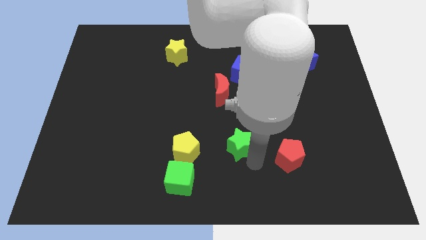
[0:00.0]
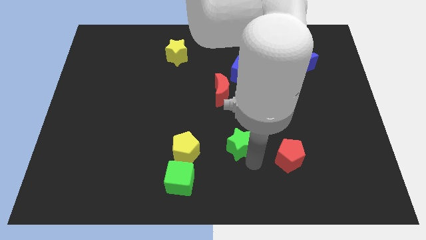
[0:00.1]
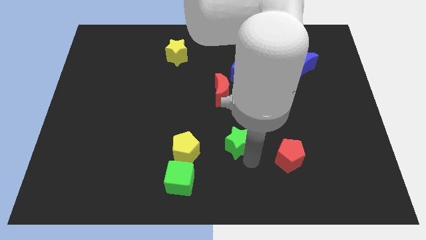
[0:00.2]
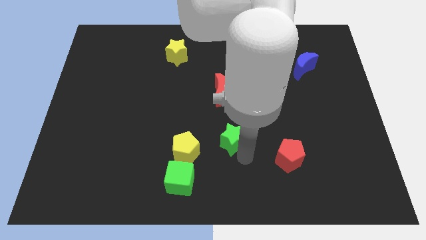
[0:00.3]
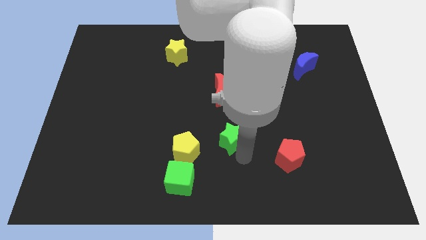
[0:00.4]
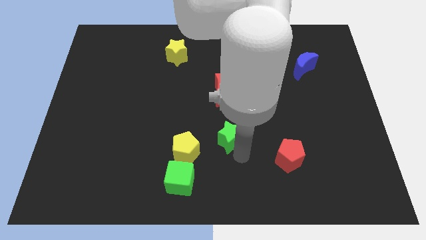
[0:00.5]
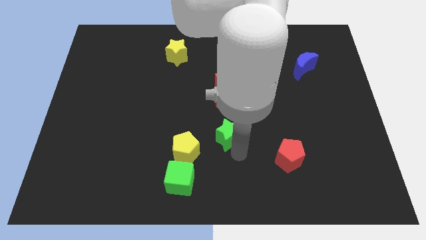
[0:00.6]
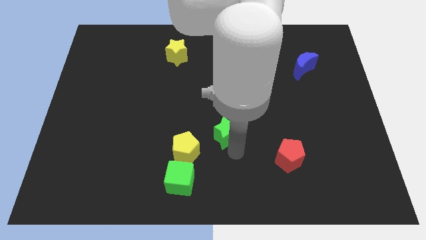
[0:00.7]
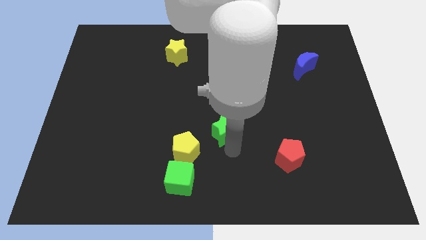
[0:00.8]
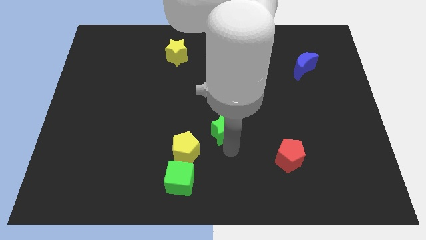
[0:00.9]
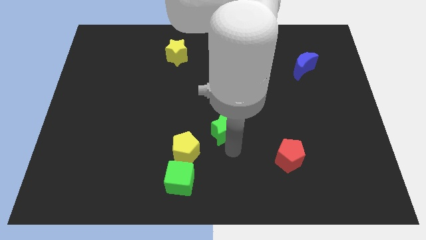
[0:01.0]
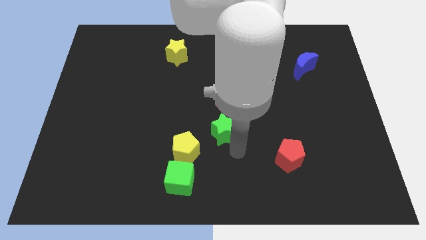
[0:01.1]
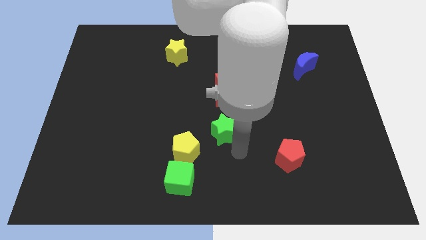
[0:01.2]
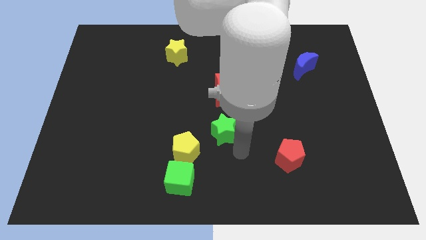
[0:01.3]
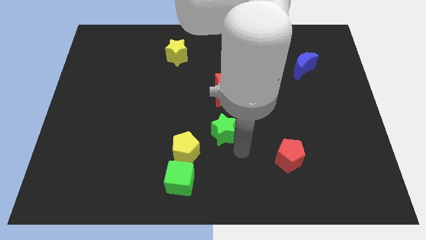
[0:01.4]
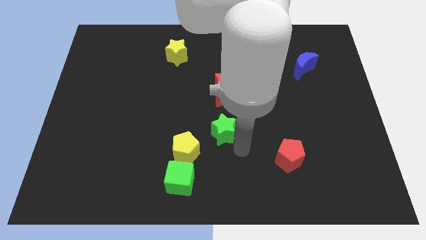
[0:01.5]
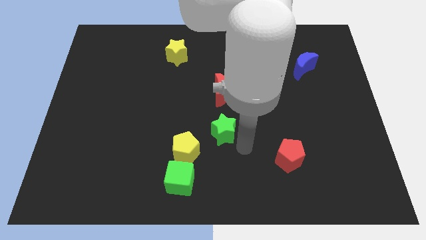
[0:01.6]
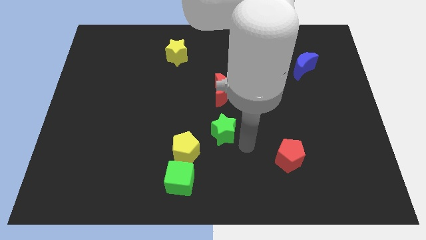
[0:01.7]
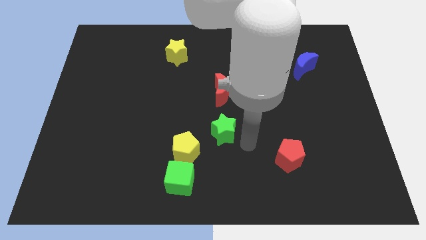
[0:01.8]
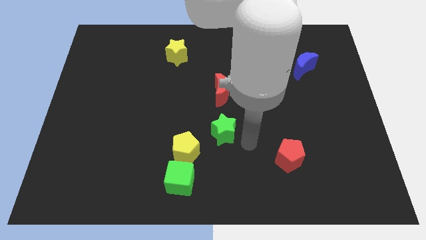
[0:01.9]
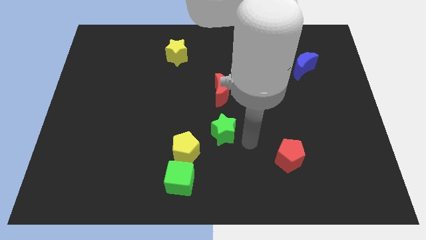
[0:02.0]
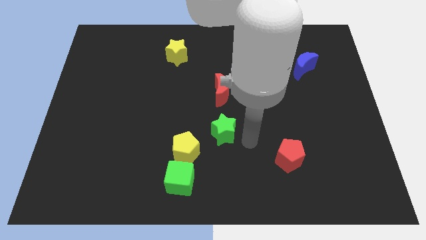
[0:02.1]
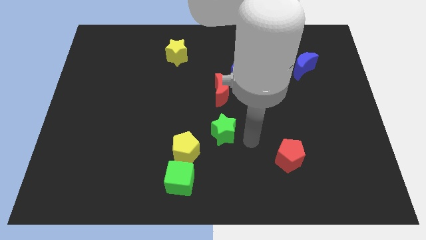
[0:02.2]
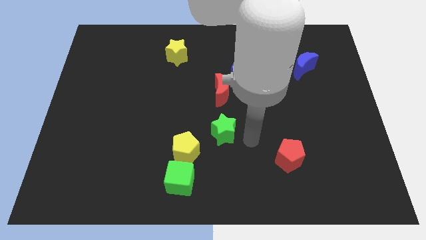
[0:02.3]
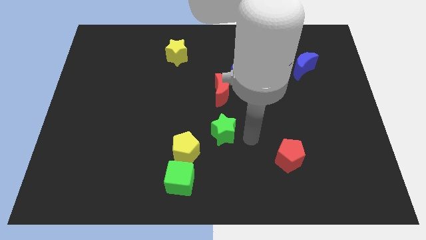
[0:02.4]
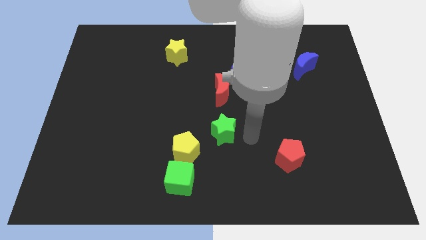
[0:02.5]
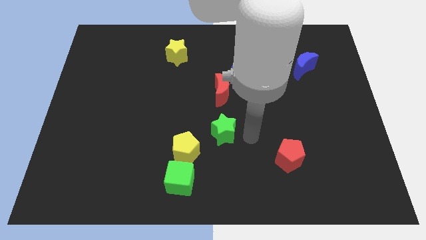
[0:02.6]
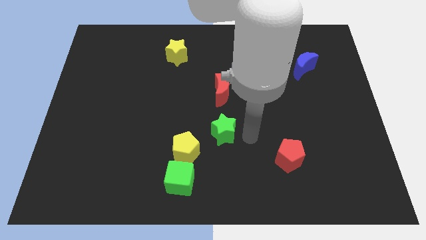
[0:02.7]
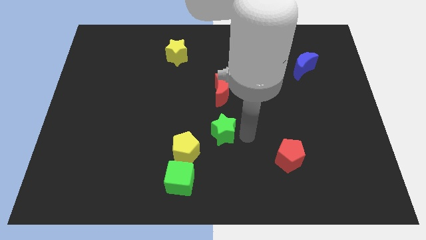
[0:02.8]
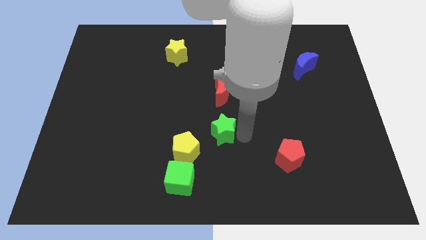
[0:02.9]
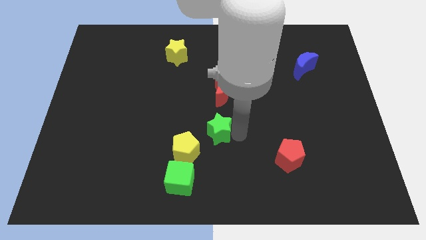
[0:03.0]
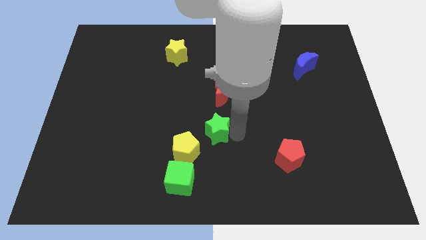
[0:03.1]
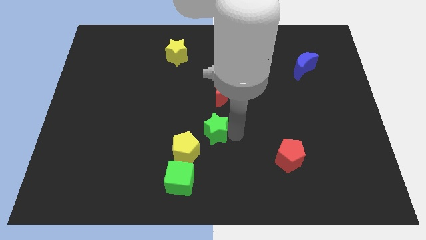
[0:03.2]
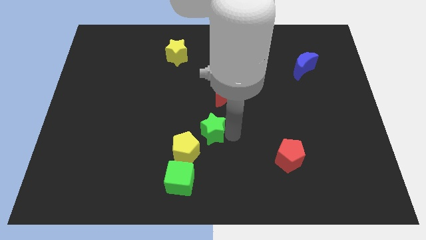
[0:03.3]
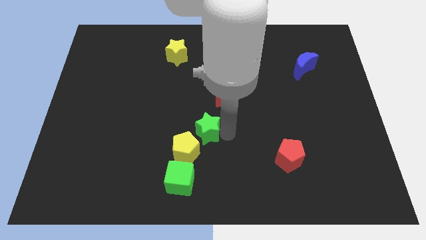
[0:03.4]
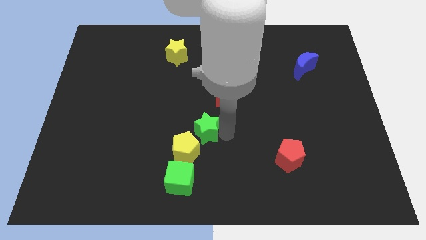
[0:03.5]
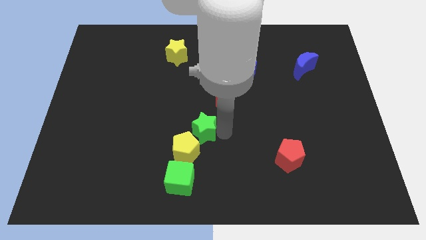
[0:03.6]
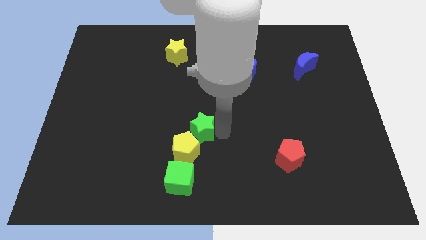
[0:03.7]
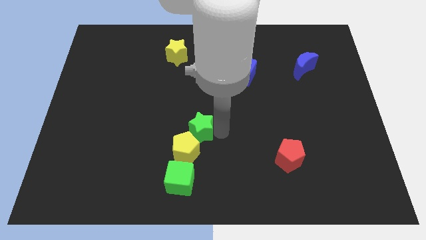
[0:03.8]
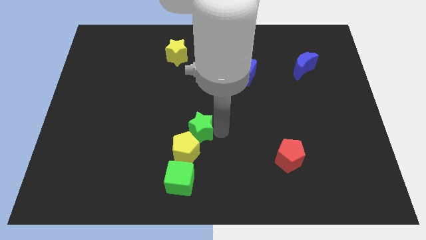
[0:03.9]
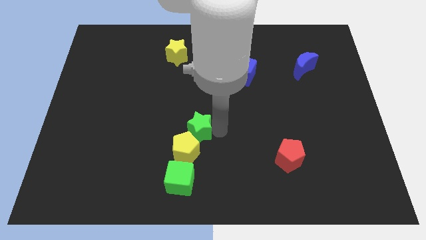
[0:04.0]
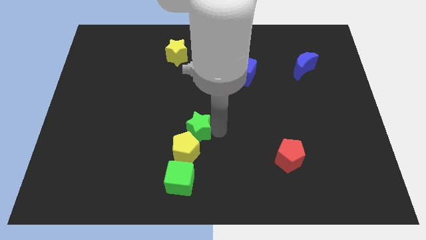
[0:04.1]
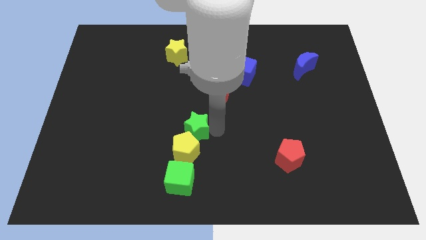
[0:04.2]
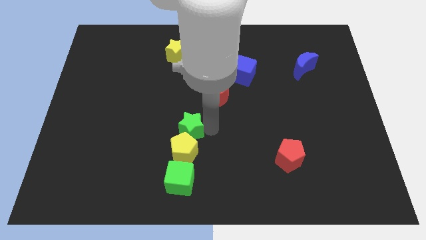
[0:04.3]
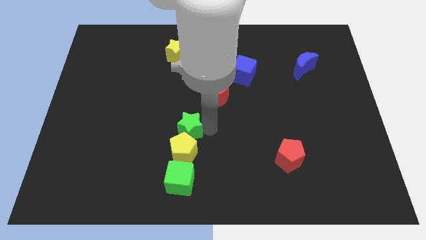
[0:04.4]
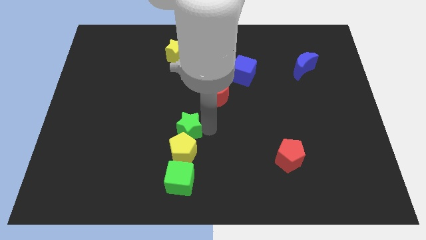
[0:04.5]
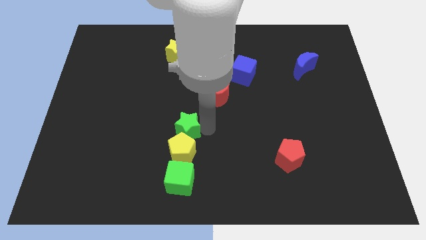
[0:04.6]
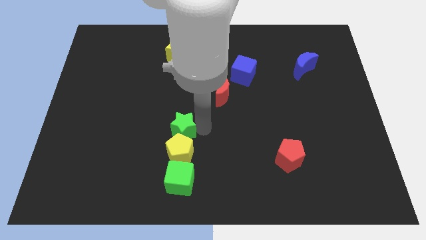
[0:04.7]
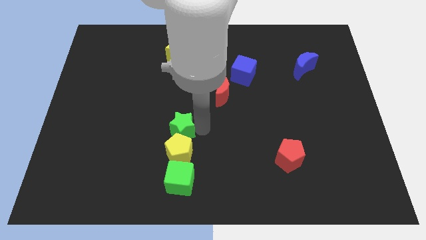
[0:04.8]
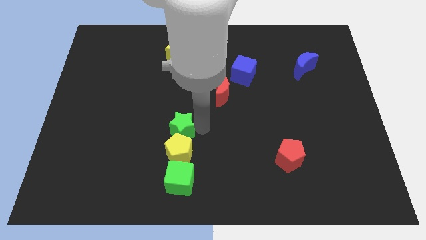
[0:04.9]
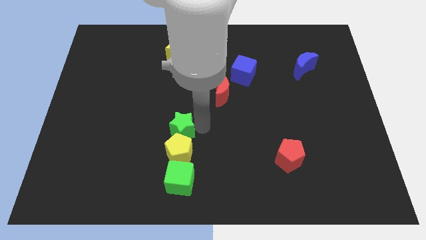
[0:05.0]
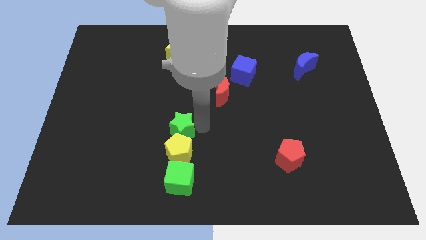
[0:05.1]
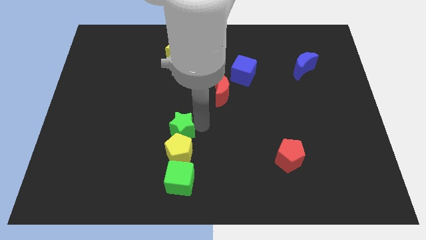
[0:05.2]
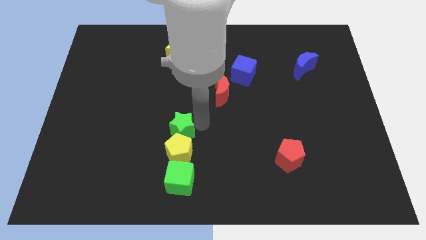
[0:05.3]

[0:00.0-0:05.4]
push the green star to the top of the yellow pentagon

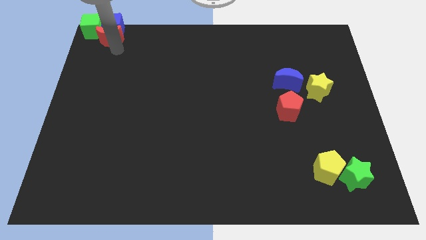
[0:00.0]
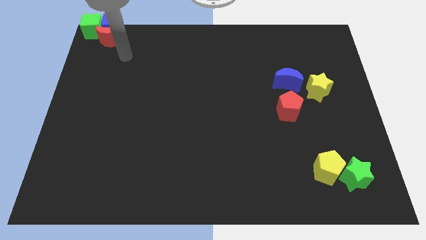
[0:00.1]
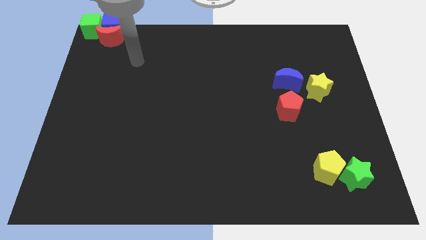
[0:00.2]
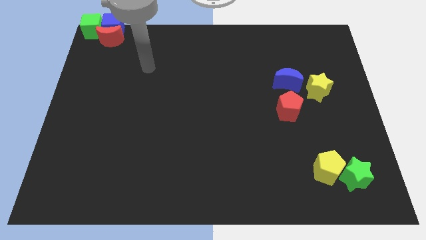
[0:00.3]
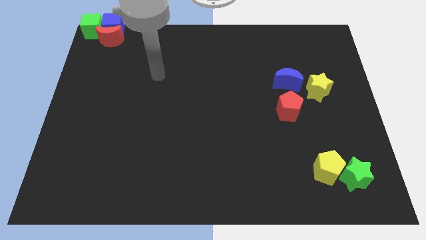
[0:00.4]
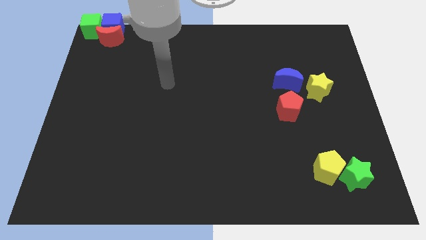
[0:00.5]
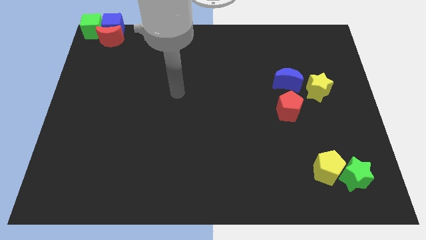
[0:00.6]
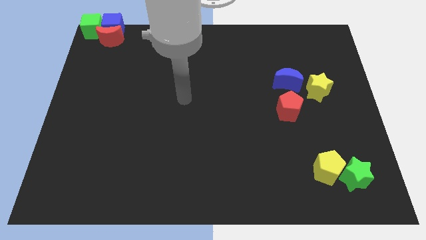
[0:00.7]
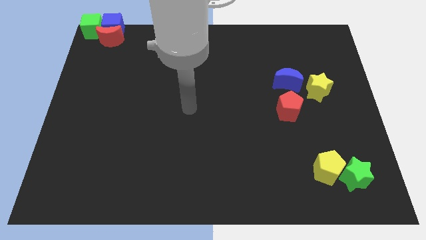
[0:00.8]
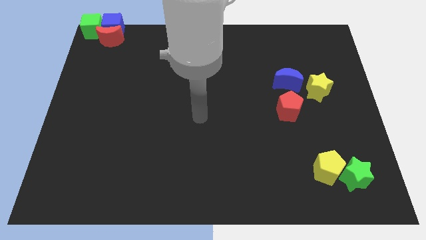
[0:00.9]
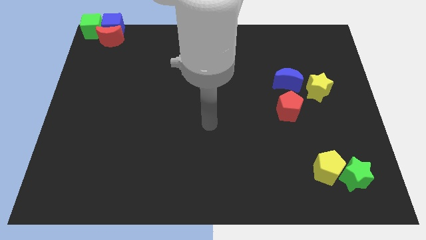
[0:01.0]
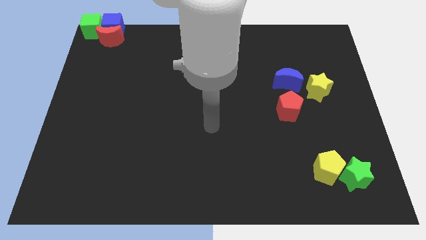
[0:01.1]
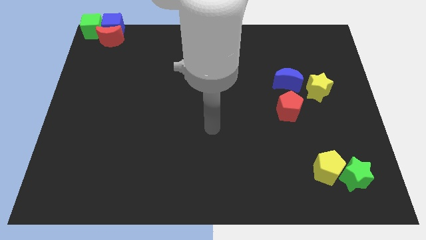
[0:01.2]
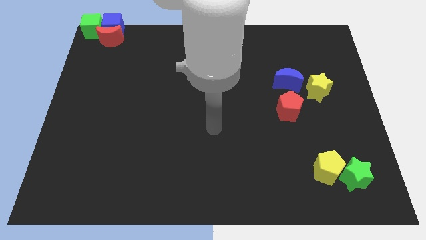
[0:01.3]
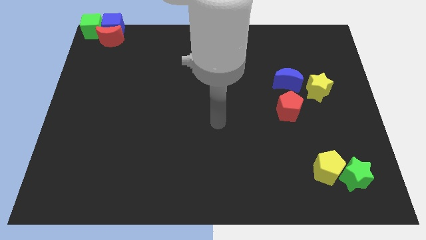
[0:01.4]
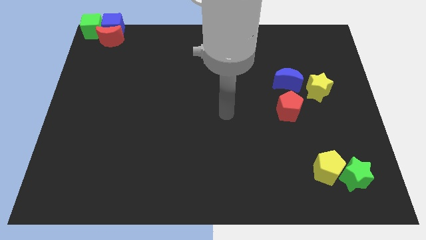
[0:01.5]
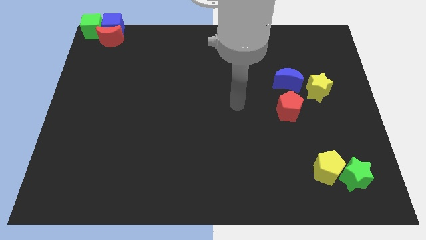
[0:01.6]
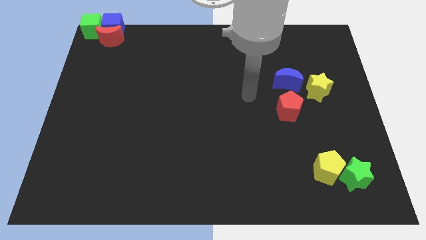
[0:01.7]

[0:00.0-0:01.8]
move your arm away from the red moon

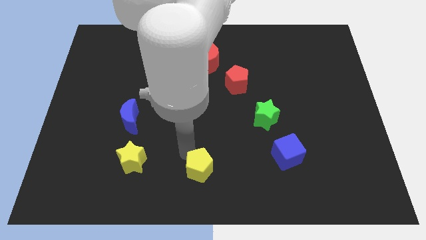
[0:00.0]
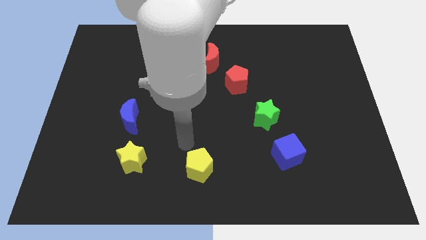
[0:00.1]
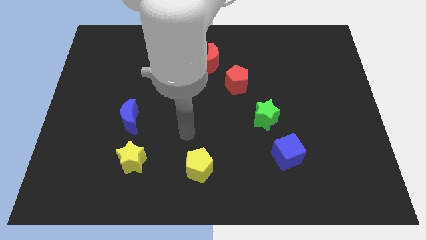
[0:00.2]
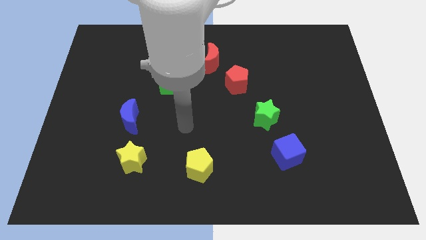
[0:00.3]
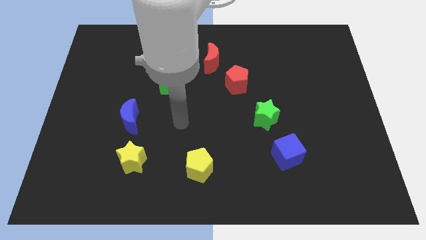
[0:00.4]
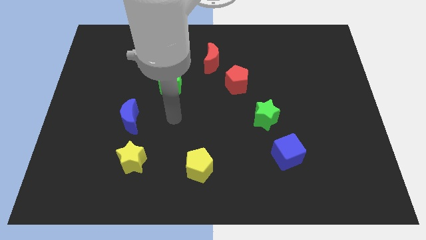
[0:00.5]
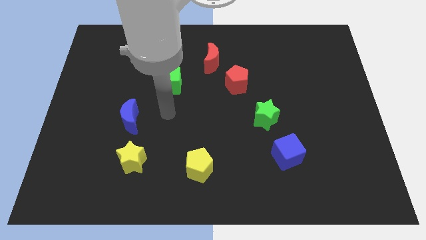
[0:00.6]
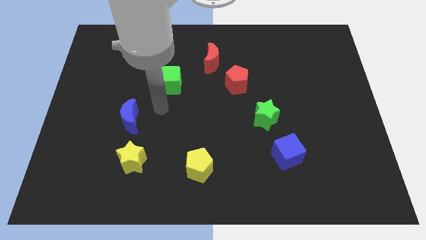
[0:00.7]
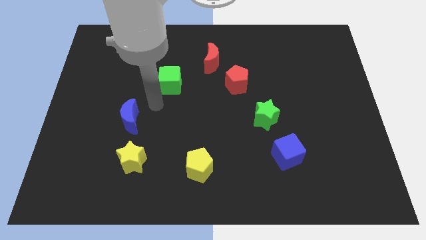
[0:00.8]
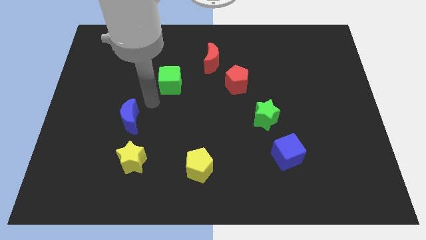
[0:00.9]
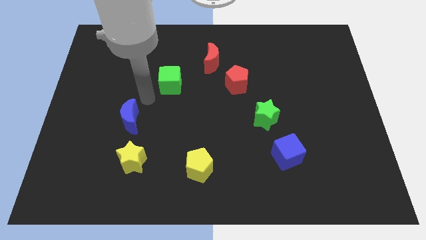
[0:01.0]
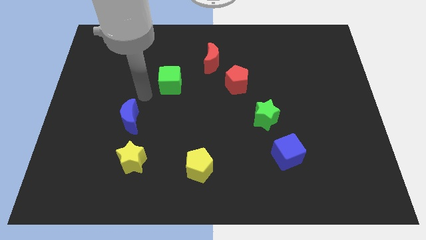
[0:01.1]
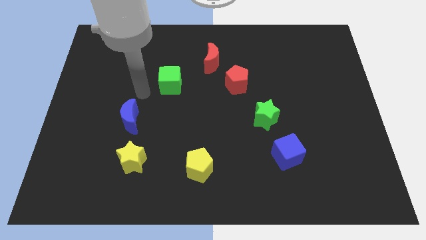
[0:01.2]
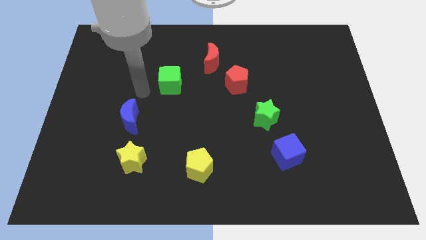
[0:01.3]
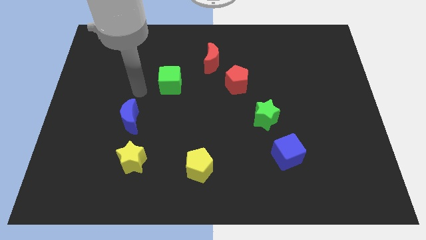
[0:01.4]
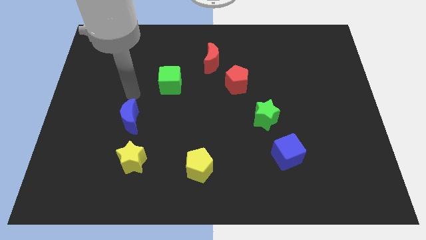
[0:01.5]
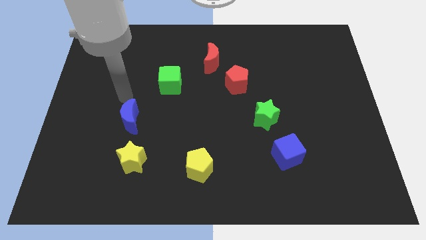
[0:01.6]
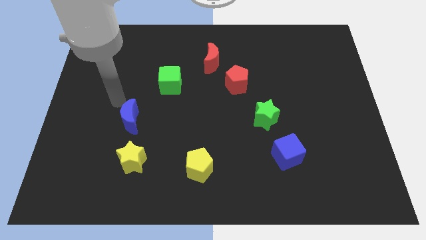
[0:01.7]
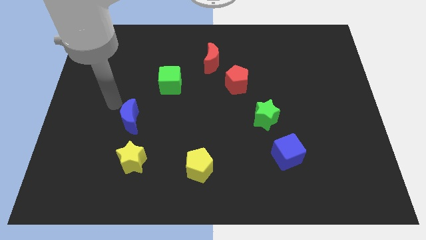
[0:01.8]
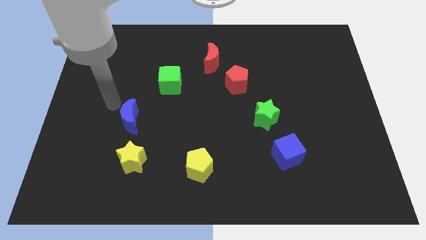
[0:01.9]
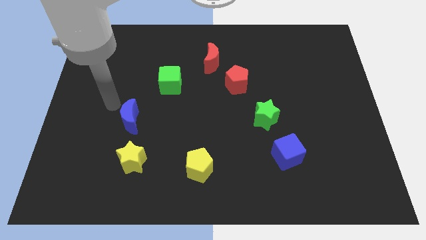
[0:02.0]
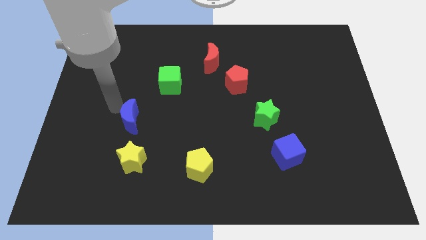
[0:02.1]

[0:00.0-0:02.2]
move your arm towards the top of blue crescent
